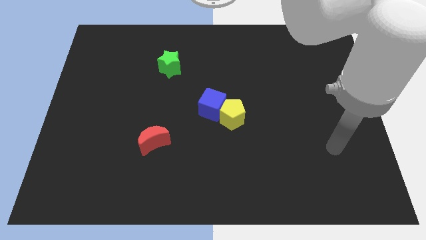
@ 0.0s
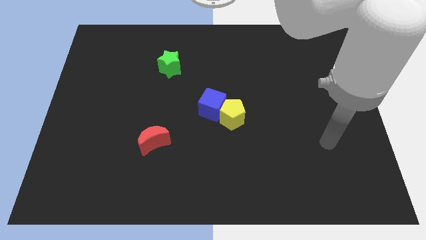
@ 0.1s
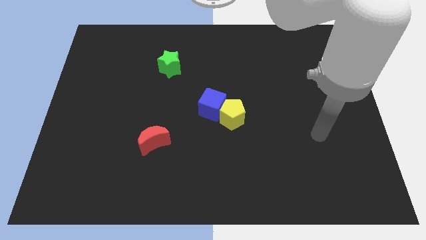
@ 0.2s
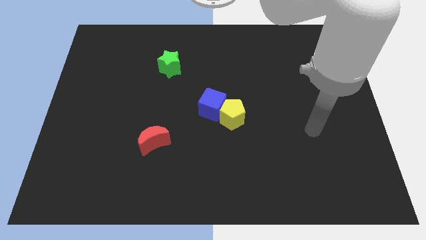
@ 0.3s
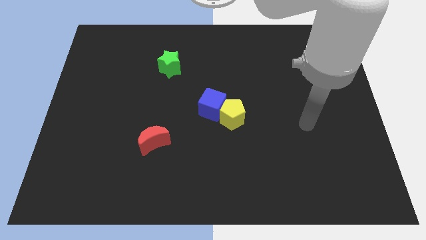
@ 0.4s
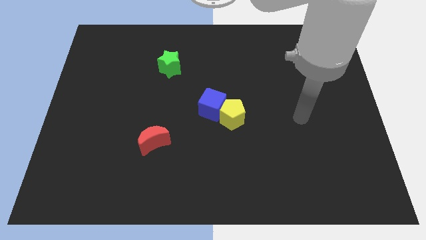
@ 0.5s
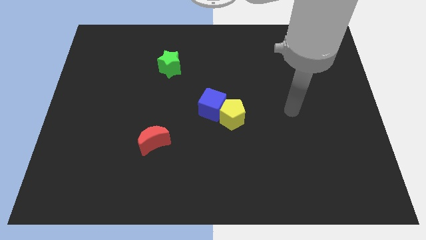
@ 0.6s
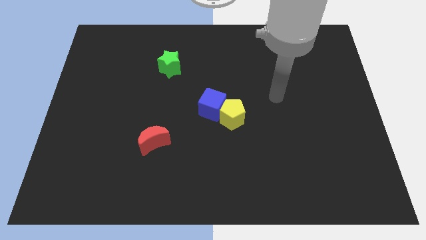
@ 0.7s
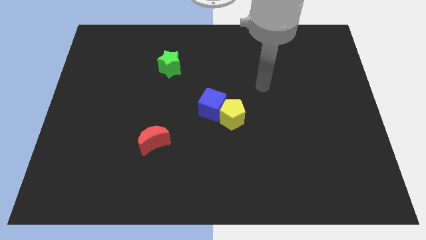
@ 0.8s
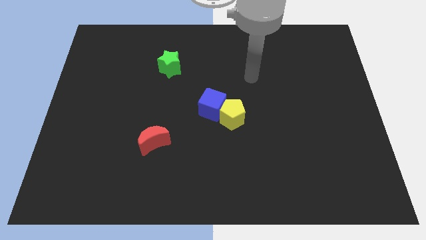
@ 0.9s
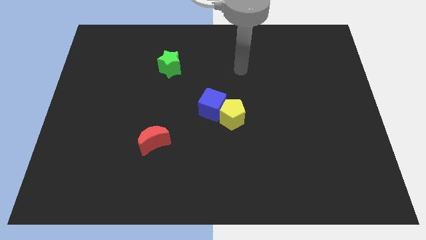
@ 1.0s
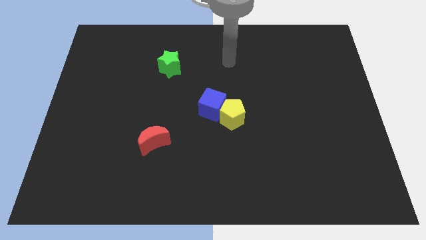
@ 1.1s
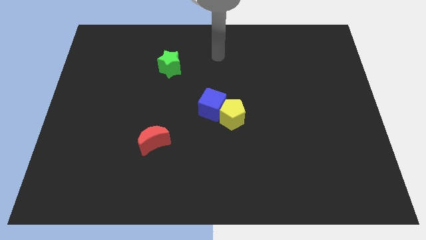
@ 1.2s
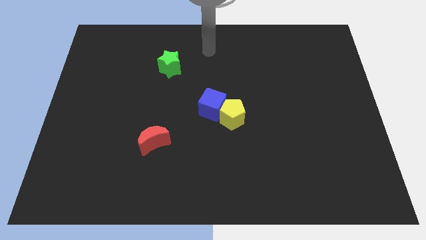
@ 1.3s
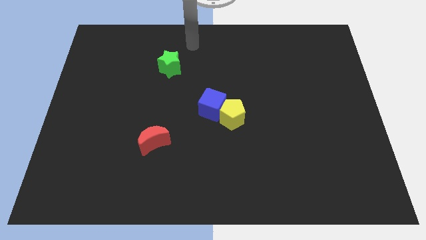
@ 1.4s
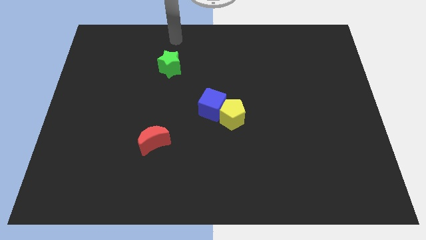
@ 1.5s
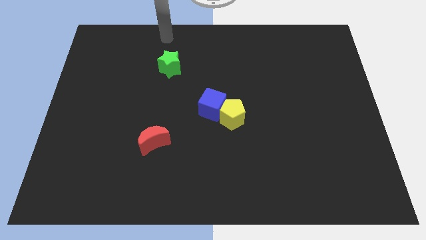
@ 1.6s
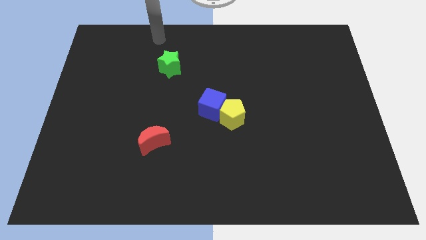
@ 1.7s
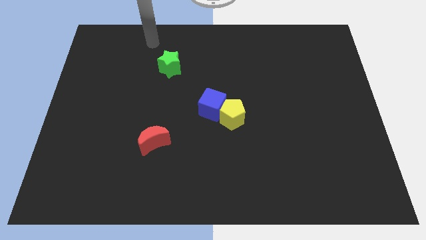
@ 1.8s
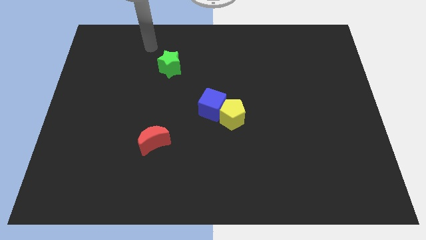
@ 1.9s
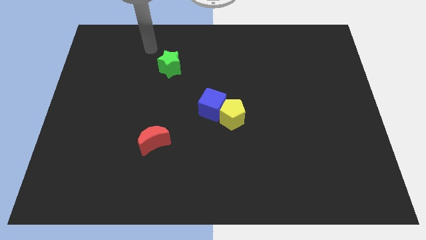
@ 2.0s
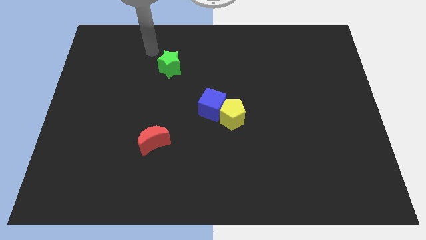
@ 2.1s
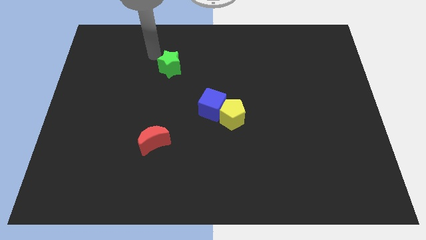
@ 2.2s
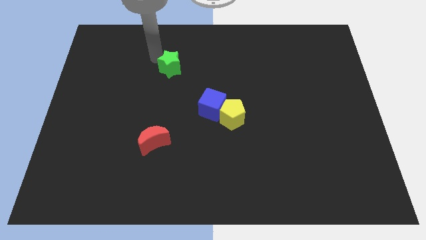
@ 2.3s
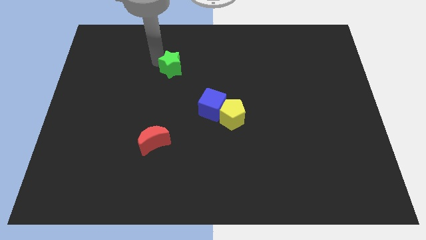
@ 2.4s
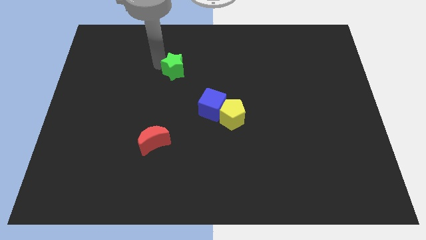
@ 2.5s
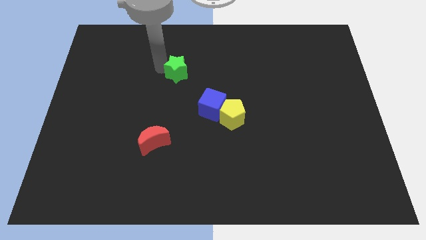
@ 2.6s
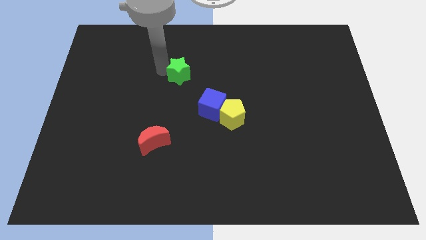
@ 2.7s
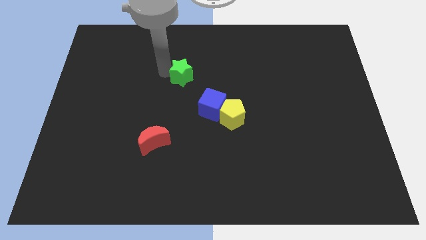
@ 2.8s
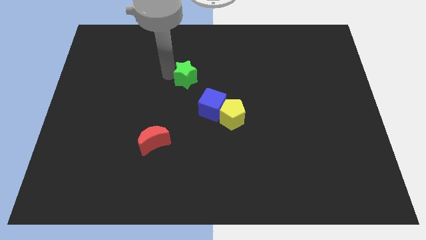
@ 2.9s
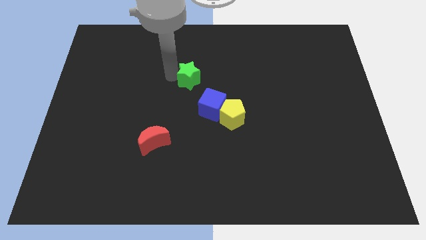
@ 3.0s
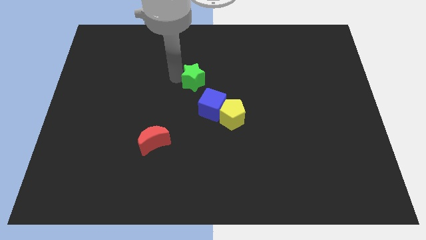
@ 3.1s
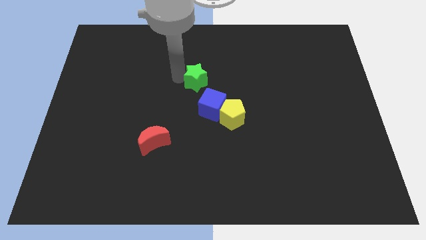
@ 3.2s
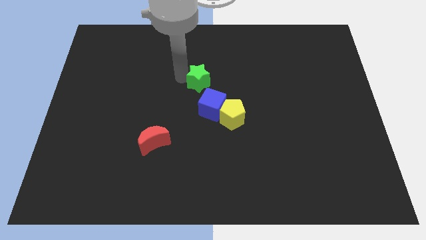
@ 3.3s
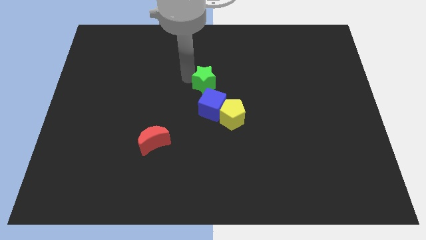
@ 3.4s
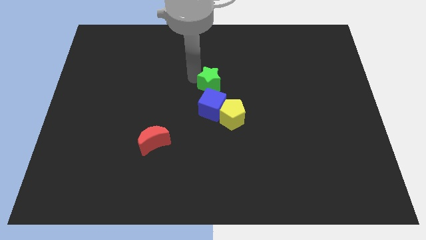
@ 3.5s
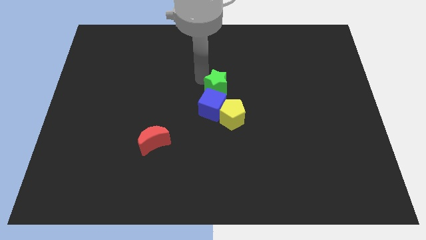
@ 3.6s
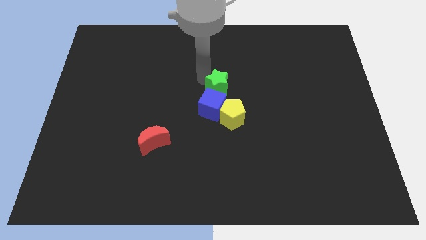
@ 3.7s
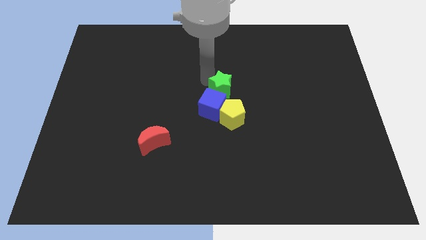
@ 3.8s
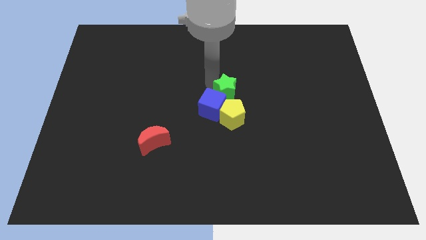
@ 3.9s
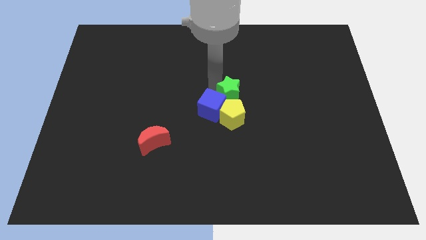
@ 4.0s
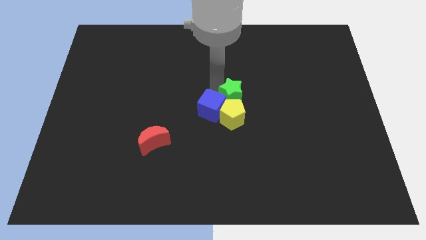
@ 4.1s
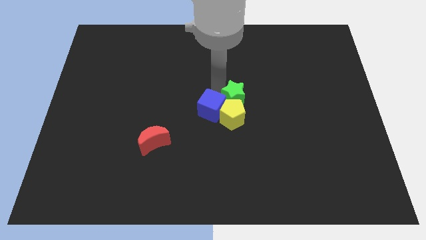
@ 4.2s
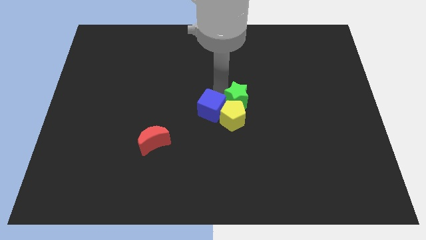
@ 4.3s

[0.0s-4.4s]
put the green block close to the pentagon

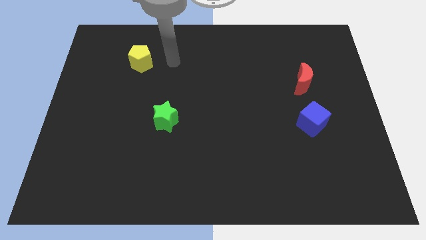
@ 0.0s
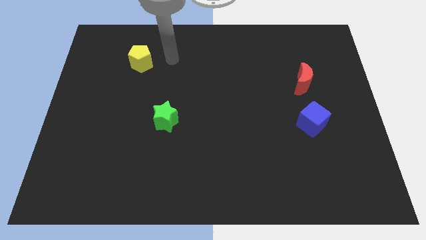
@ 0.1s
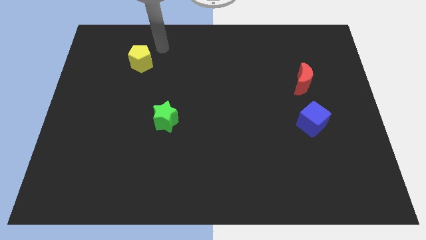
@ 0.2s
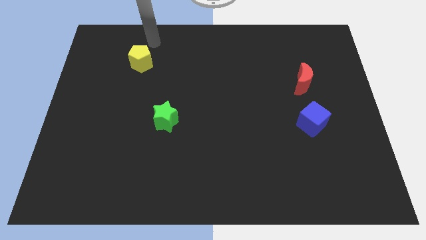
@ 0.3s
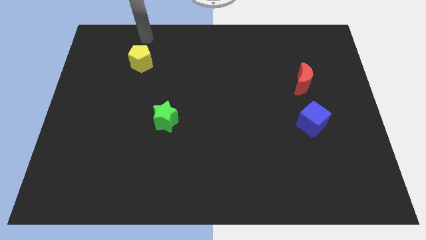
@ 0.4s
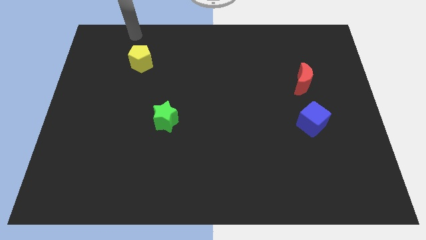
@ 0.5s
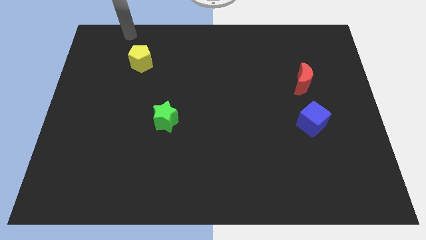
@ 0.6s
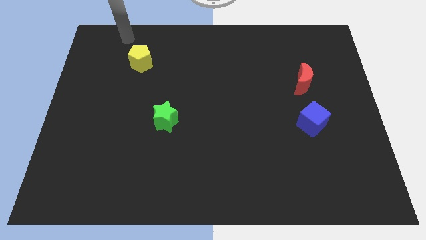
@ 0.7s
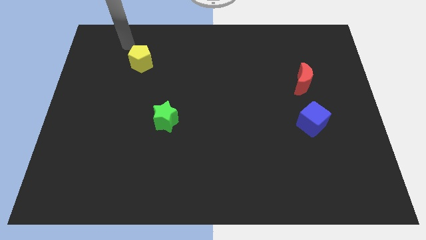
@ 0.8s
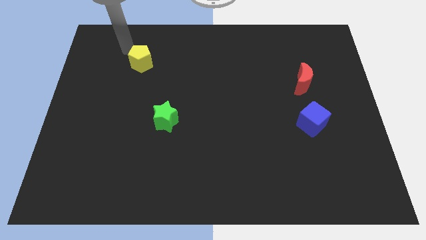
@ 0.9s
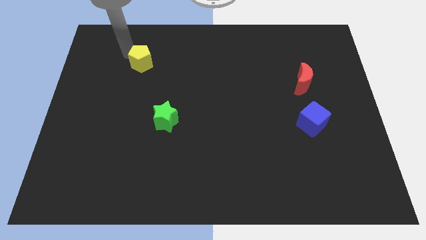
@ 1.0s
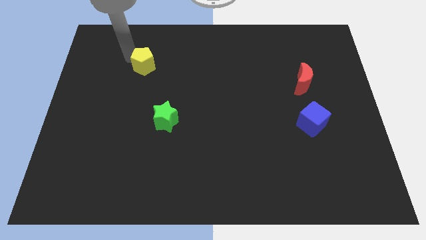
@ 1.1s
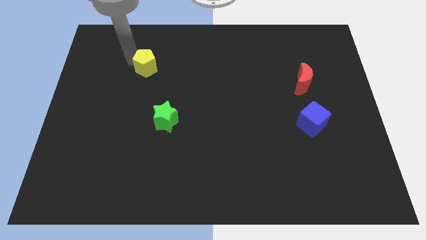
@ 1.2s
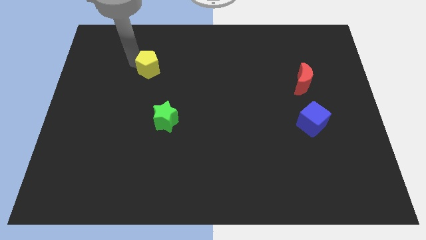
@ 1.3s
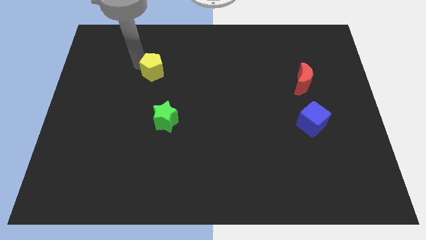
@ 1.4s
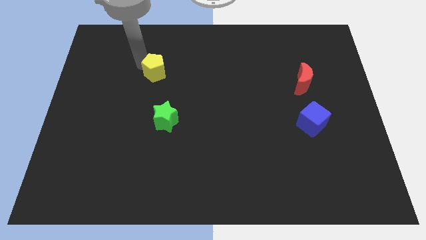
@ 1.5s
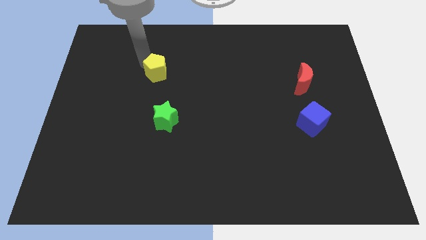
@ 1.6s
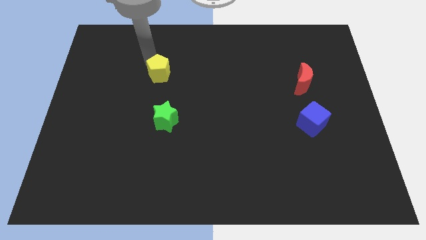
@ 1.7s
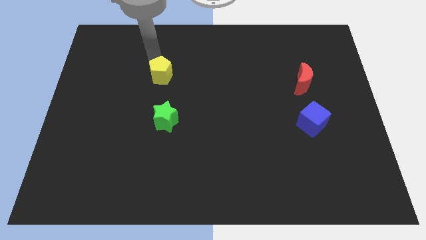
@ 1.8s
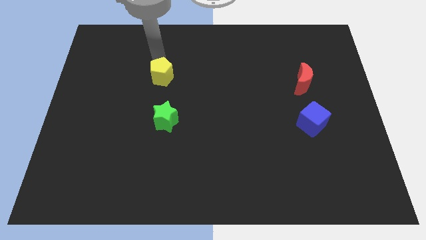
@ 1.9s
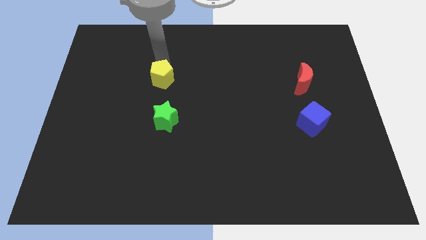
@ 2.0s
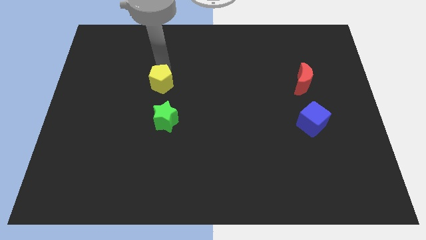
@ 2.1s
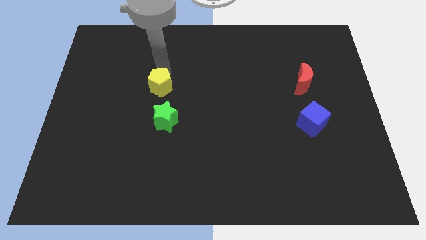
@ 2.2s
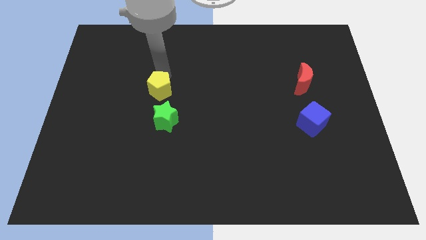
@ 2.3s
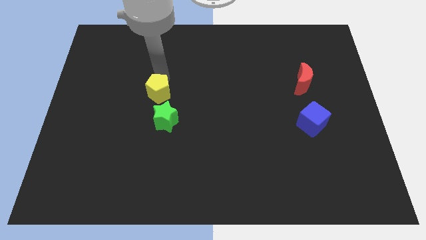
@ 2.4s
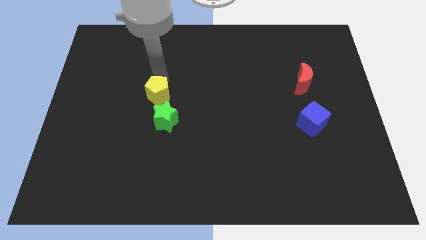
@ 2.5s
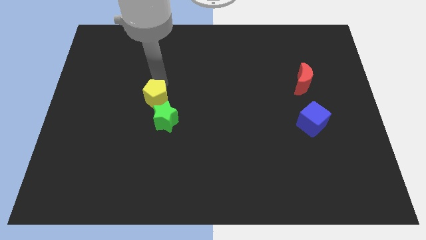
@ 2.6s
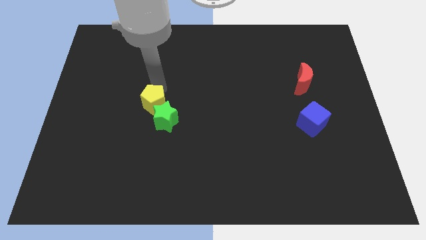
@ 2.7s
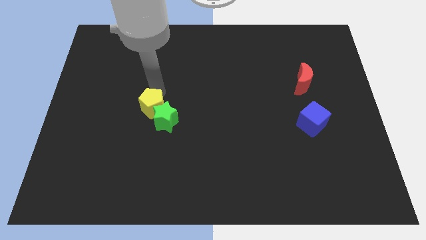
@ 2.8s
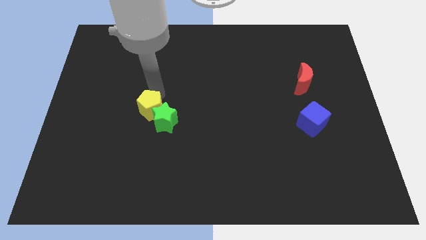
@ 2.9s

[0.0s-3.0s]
slide the yellow block towards the green star

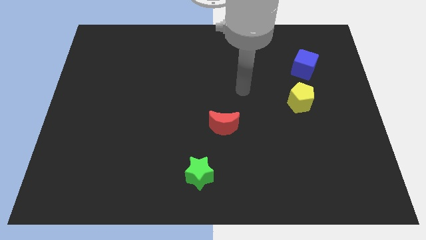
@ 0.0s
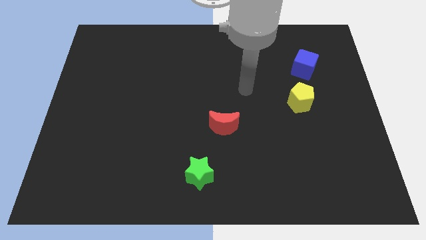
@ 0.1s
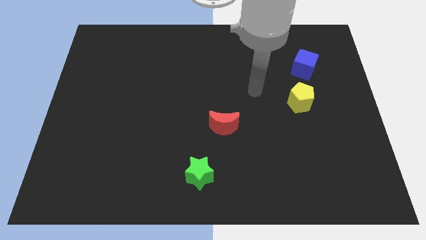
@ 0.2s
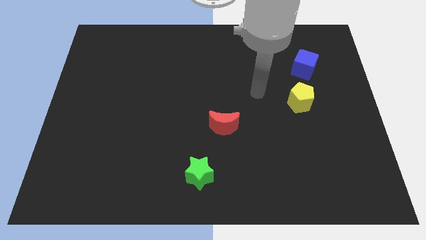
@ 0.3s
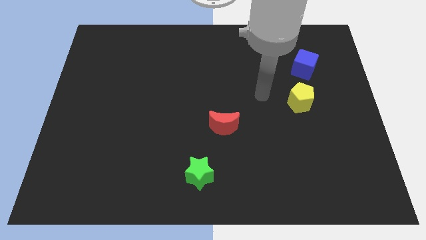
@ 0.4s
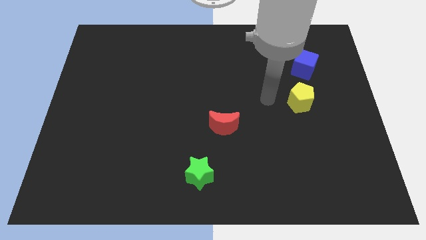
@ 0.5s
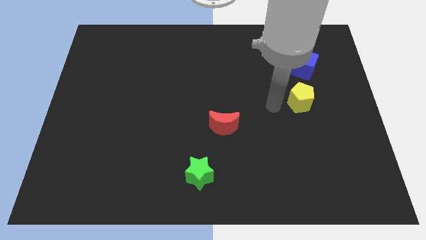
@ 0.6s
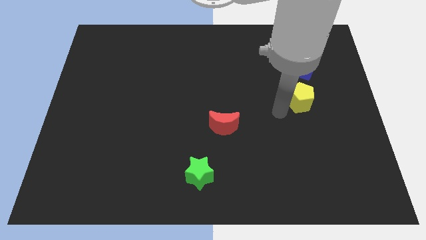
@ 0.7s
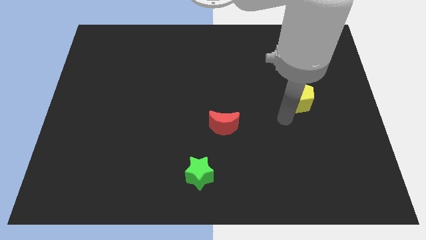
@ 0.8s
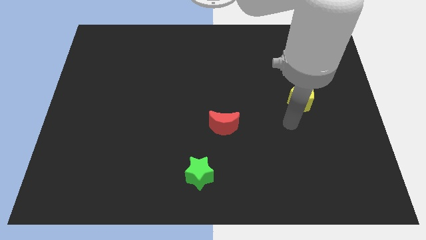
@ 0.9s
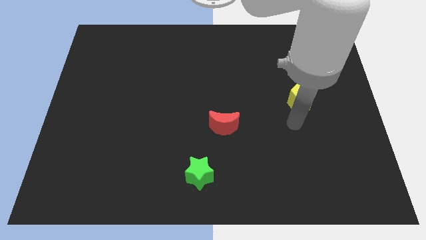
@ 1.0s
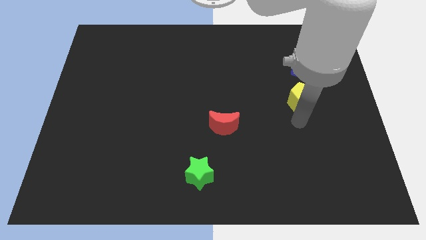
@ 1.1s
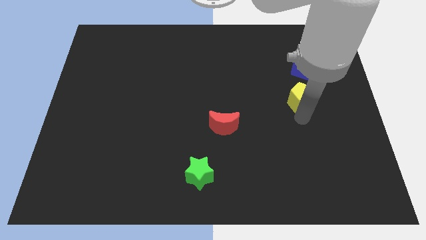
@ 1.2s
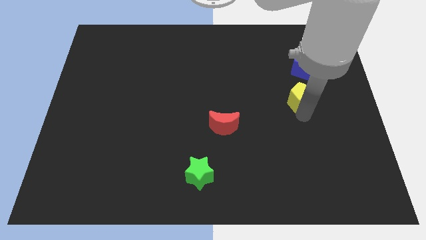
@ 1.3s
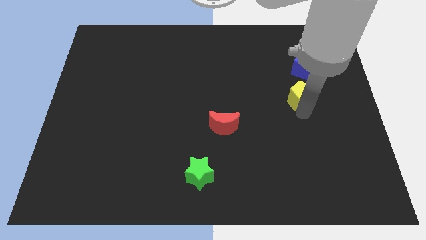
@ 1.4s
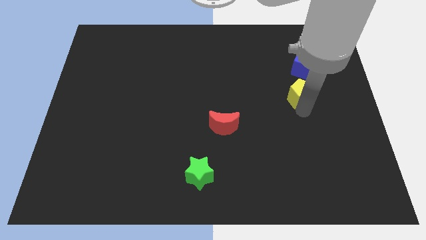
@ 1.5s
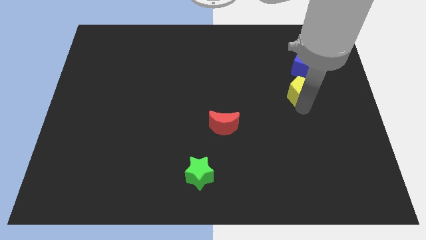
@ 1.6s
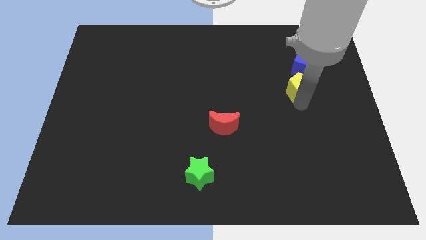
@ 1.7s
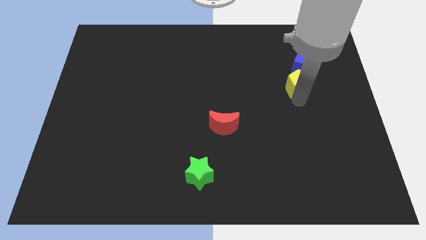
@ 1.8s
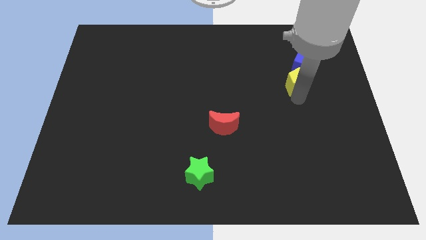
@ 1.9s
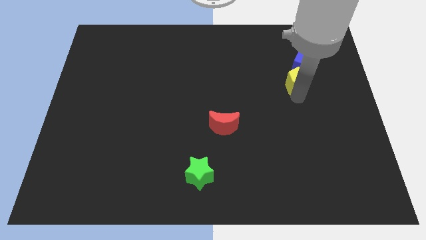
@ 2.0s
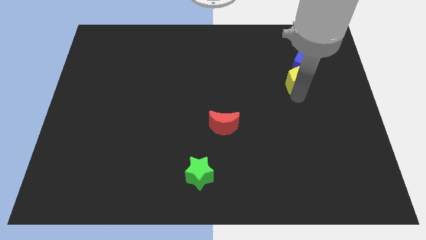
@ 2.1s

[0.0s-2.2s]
push the yellow block to the blue cube
